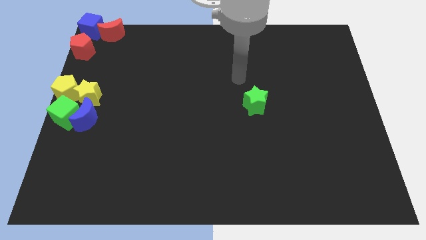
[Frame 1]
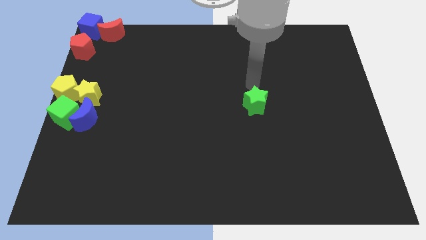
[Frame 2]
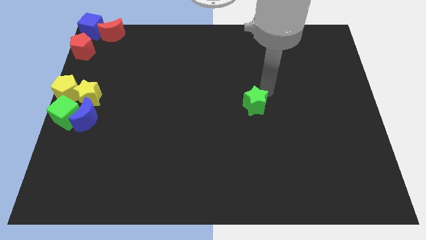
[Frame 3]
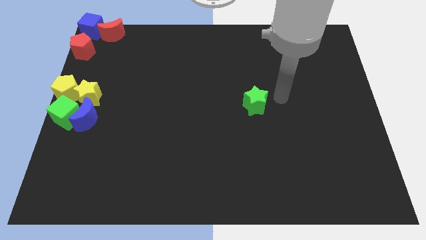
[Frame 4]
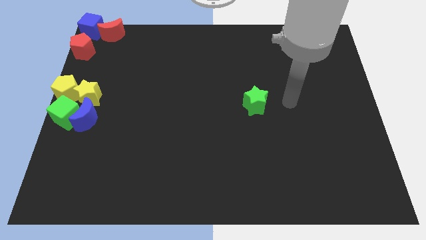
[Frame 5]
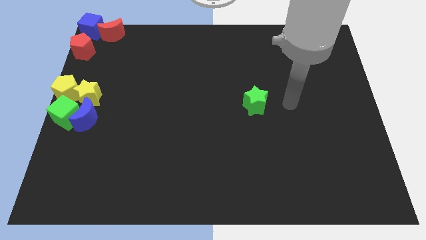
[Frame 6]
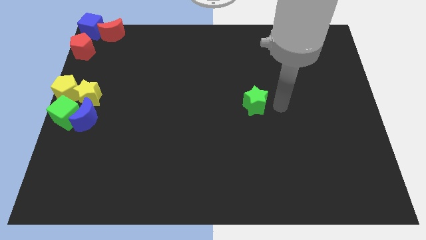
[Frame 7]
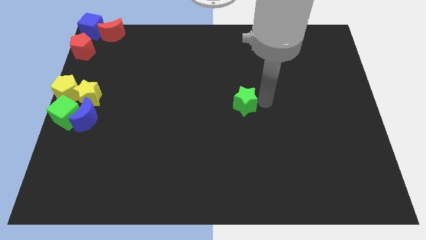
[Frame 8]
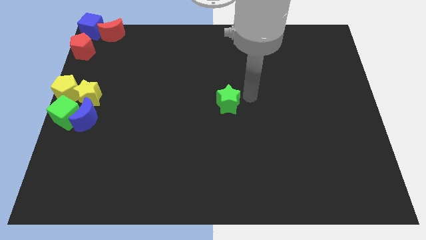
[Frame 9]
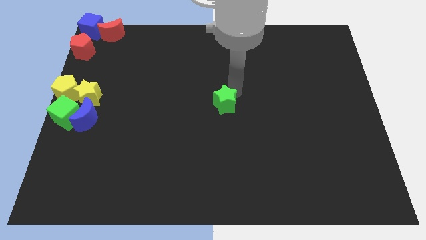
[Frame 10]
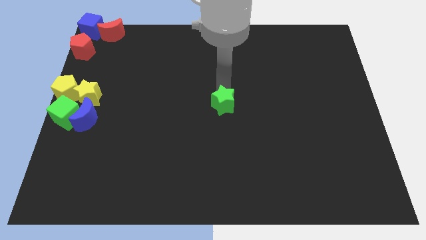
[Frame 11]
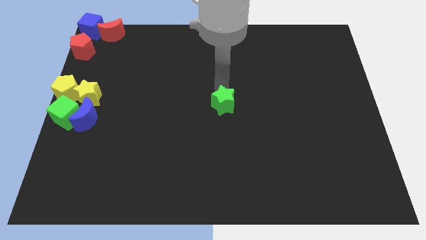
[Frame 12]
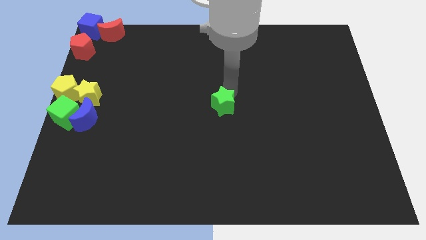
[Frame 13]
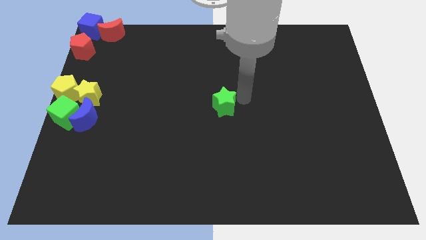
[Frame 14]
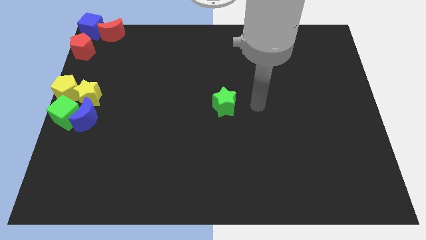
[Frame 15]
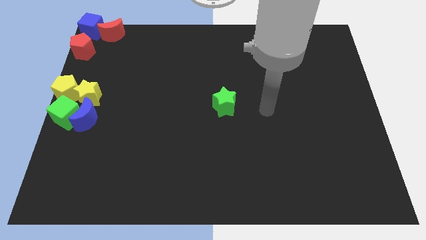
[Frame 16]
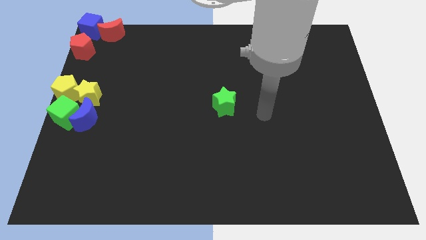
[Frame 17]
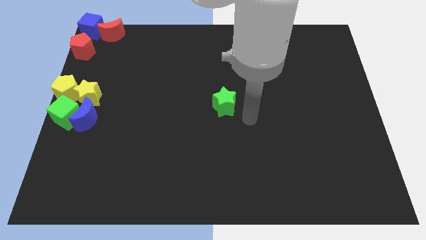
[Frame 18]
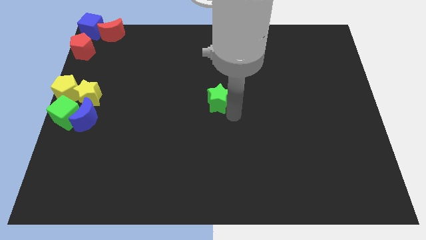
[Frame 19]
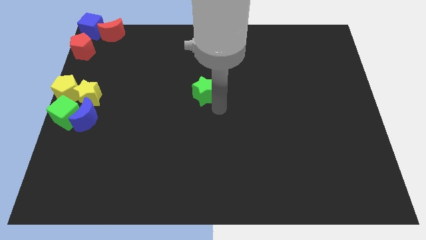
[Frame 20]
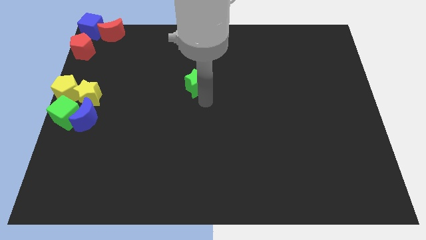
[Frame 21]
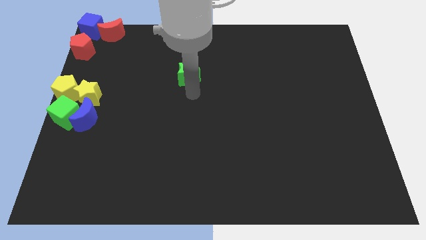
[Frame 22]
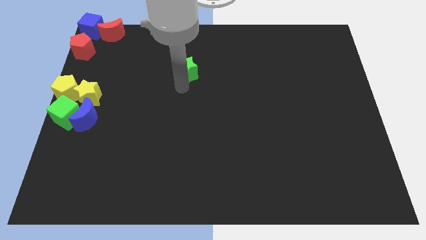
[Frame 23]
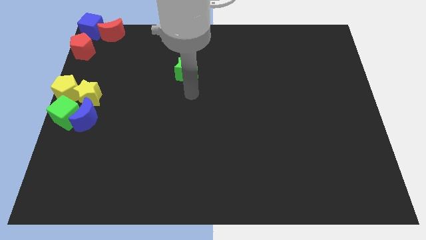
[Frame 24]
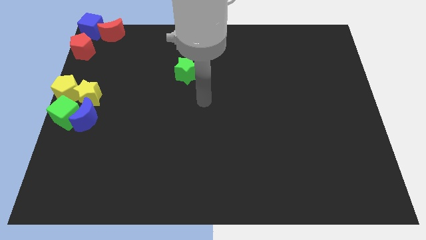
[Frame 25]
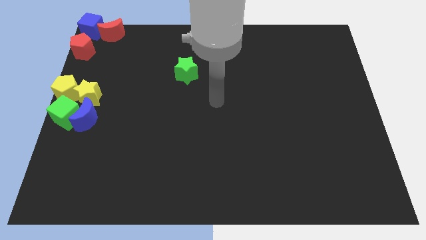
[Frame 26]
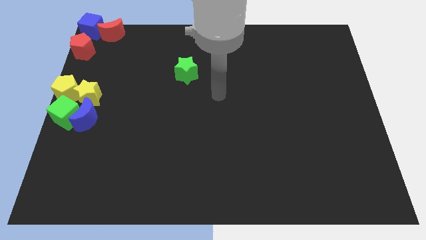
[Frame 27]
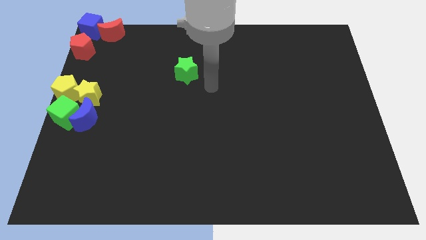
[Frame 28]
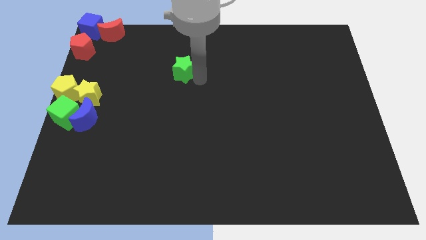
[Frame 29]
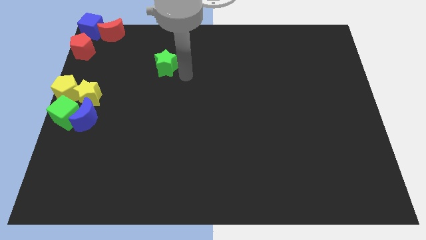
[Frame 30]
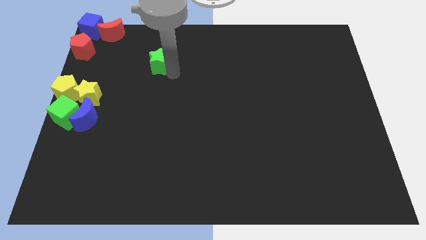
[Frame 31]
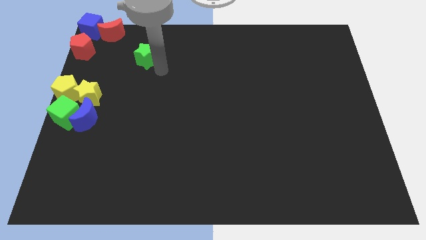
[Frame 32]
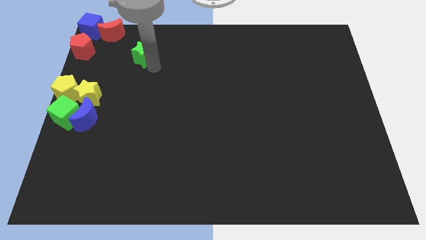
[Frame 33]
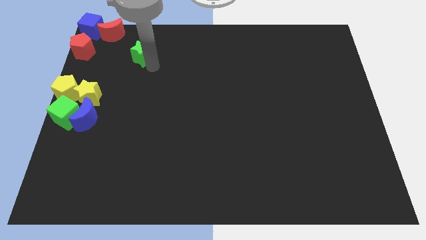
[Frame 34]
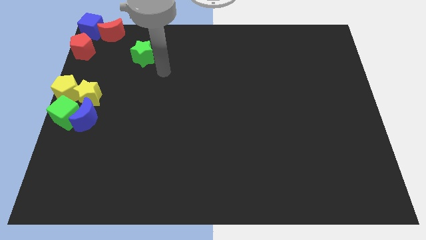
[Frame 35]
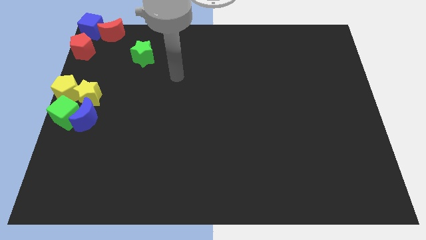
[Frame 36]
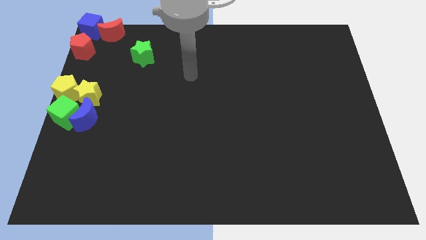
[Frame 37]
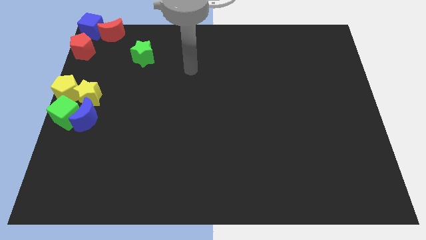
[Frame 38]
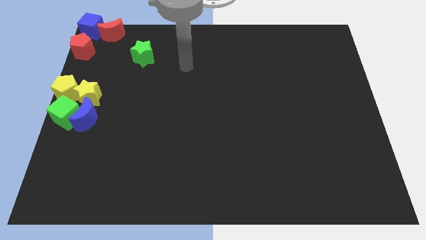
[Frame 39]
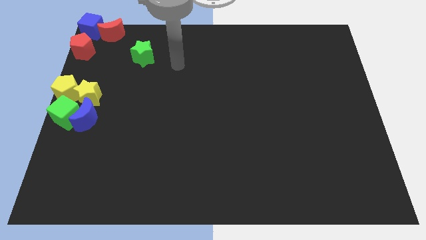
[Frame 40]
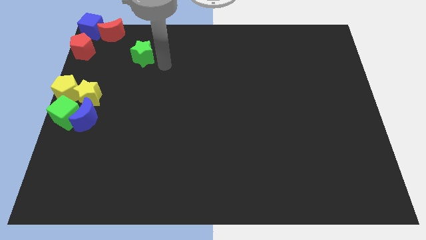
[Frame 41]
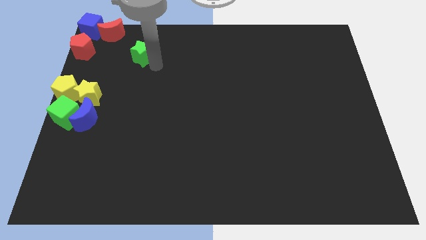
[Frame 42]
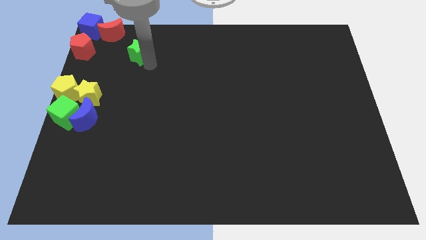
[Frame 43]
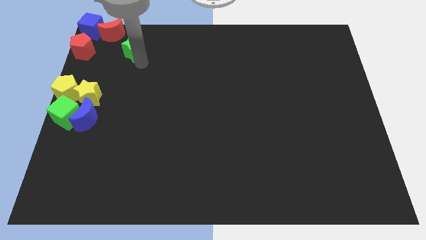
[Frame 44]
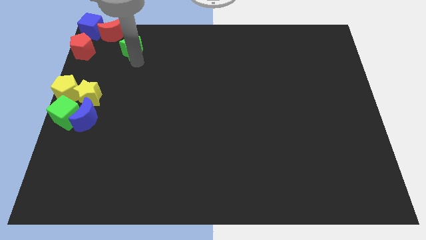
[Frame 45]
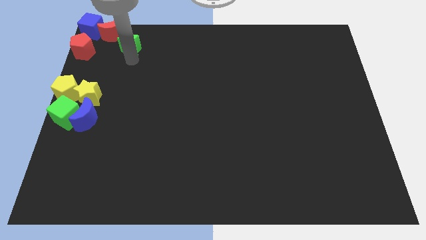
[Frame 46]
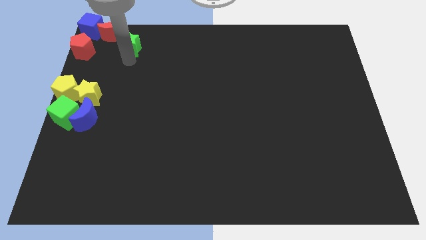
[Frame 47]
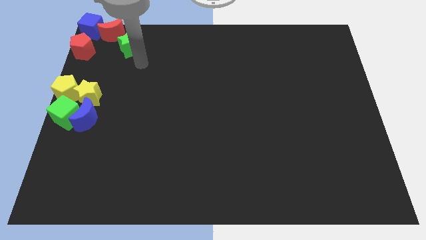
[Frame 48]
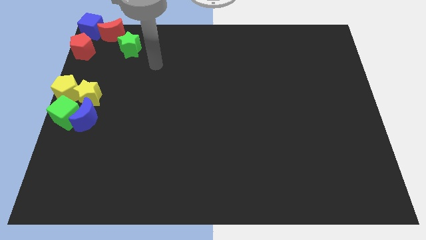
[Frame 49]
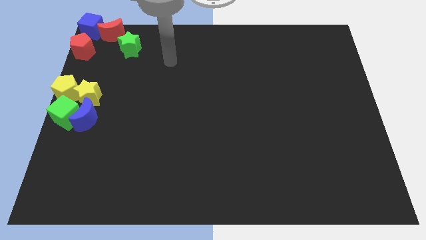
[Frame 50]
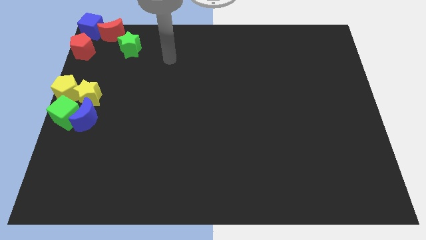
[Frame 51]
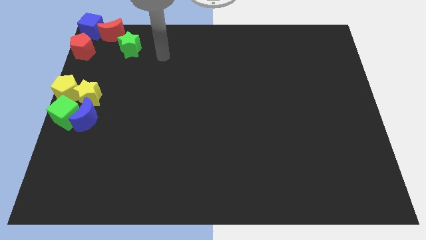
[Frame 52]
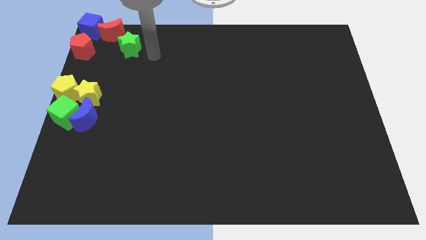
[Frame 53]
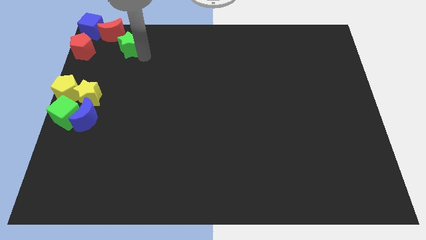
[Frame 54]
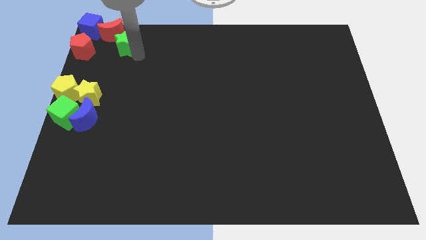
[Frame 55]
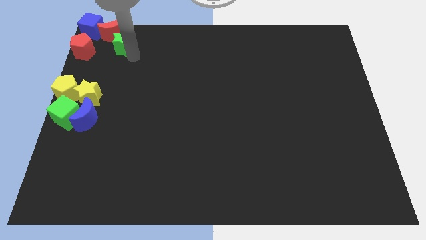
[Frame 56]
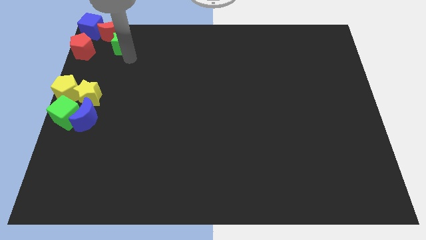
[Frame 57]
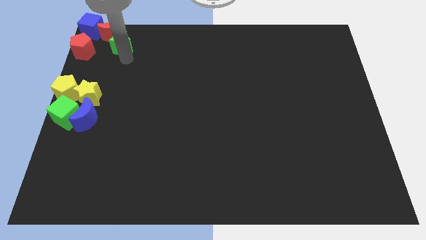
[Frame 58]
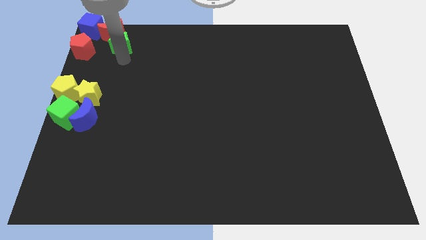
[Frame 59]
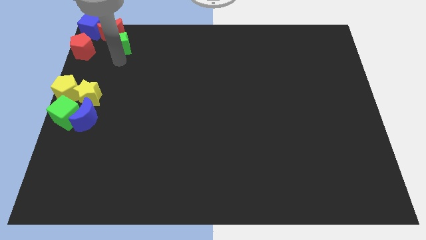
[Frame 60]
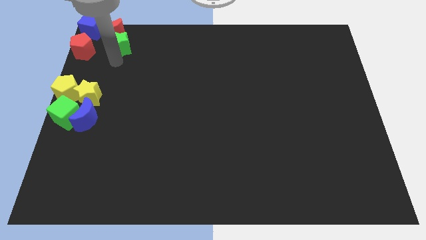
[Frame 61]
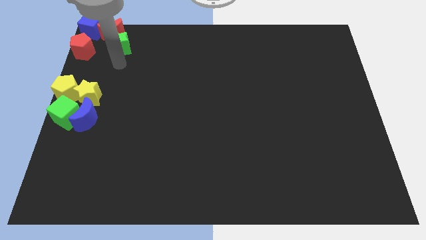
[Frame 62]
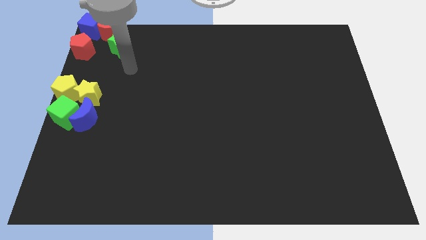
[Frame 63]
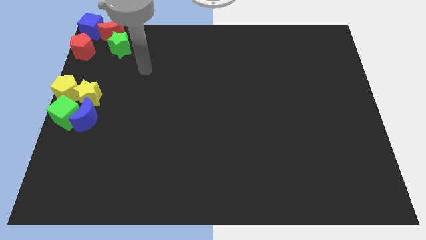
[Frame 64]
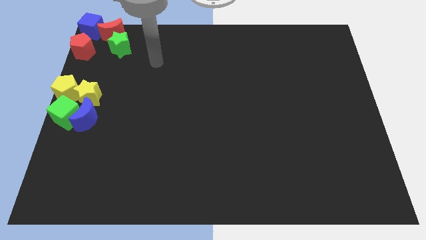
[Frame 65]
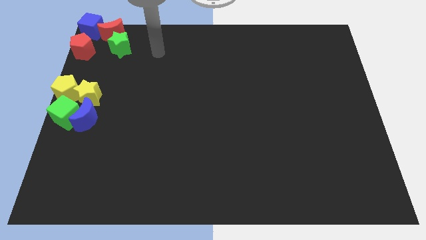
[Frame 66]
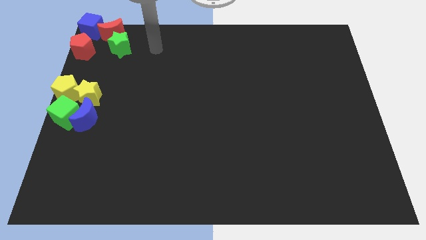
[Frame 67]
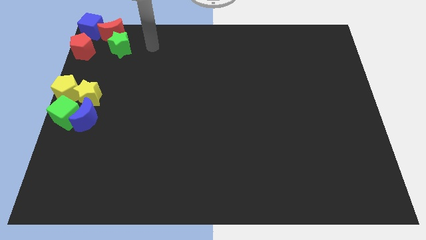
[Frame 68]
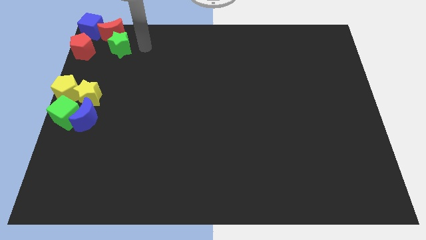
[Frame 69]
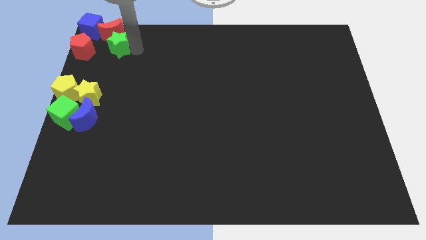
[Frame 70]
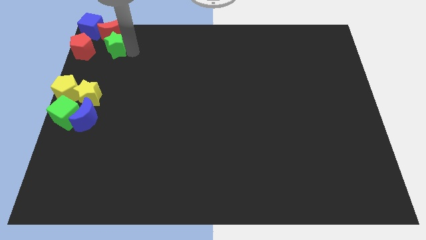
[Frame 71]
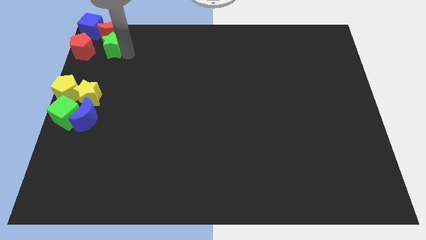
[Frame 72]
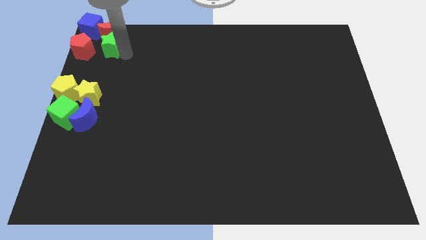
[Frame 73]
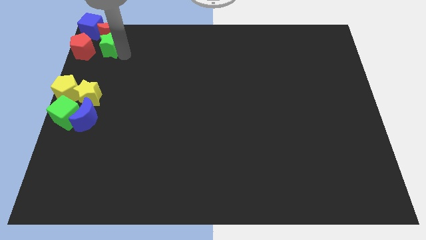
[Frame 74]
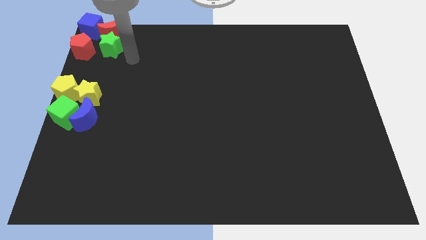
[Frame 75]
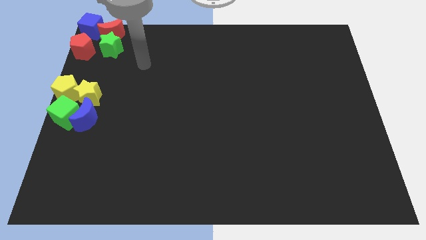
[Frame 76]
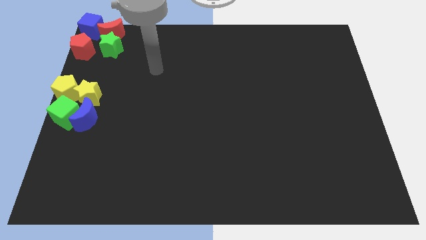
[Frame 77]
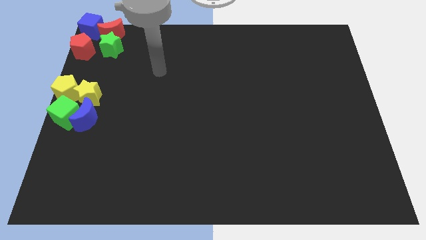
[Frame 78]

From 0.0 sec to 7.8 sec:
push the green star into the top left of the blocks

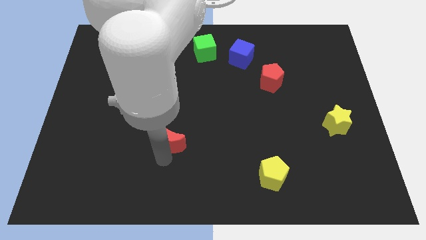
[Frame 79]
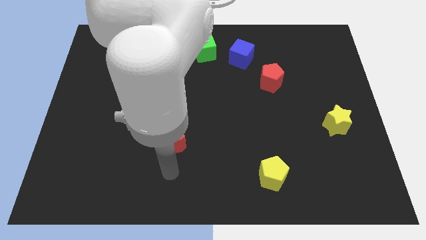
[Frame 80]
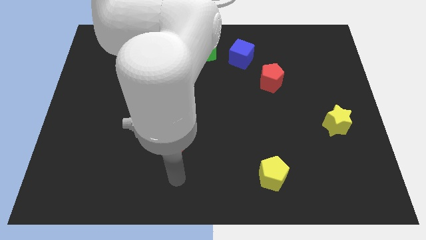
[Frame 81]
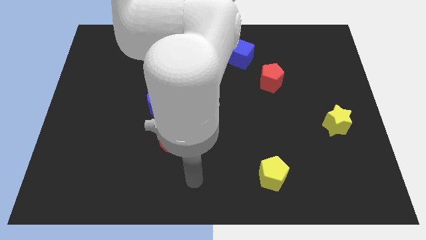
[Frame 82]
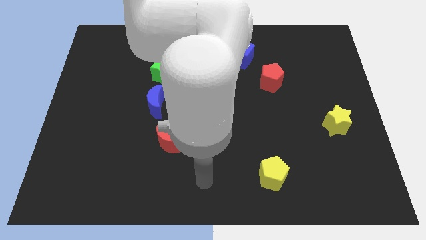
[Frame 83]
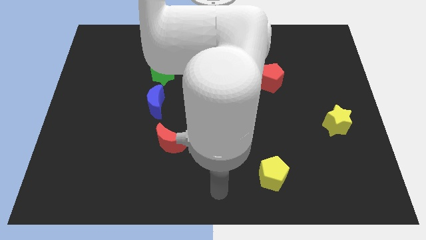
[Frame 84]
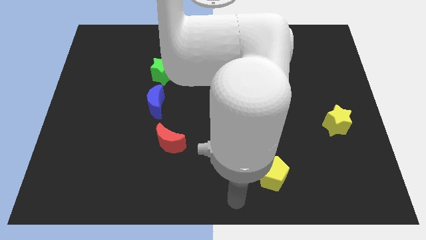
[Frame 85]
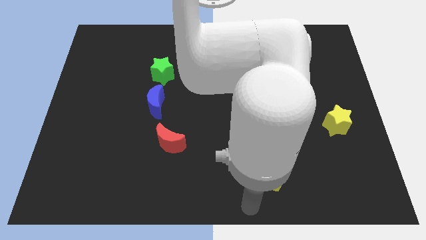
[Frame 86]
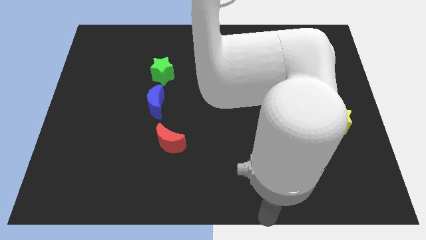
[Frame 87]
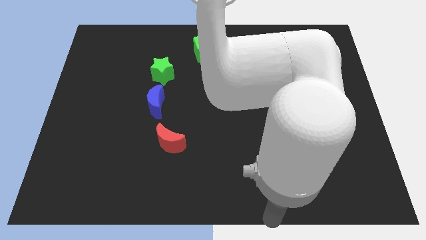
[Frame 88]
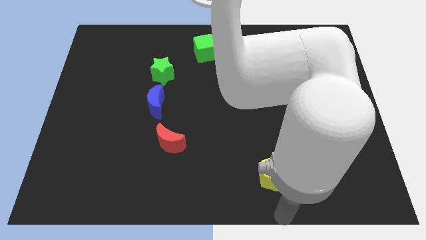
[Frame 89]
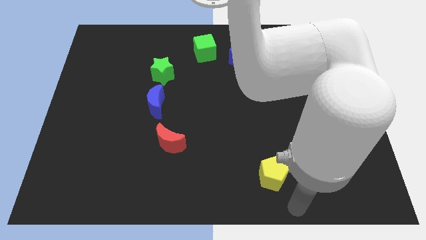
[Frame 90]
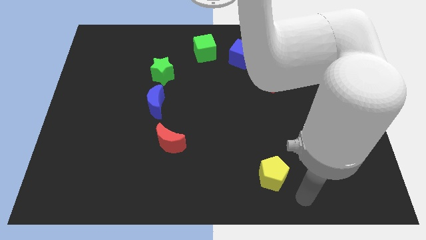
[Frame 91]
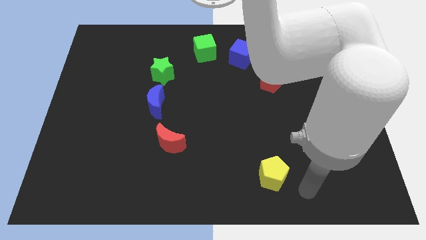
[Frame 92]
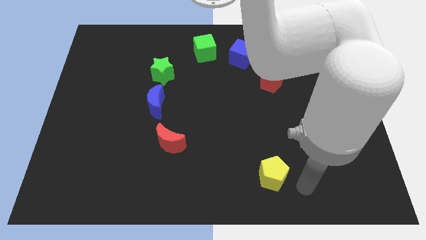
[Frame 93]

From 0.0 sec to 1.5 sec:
point your hand at the right side of the yellow pentagon
